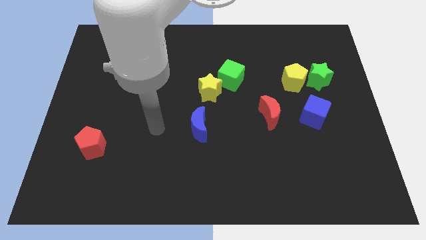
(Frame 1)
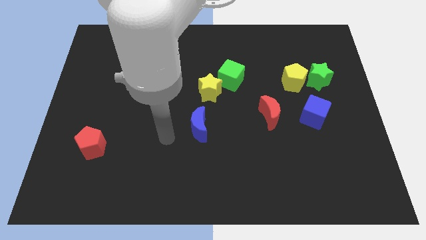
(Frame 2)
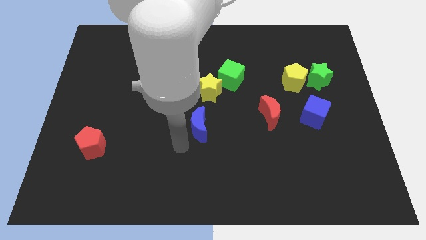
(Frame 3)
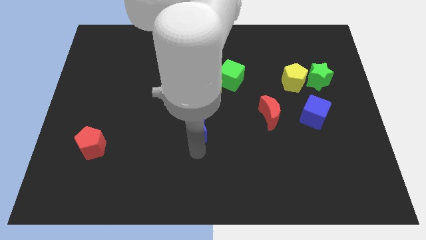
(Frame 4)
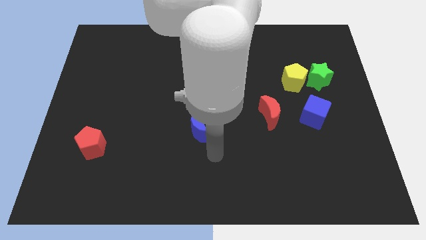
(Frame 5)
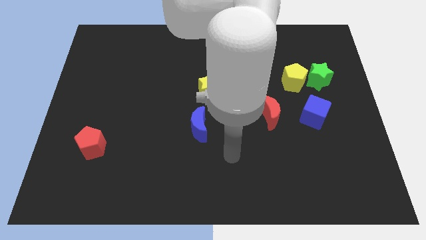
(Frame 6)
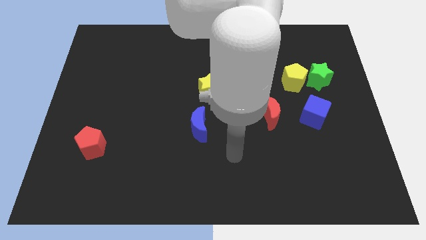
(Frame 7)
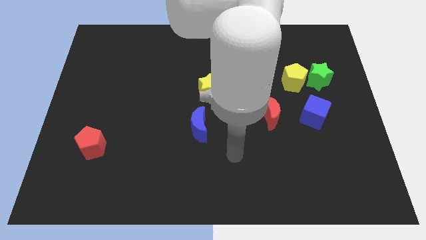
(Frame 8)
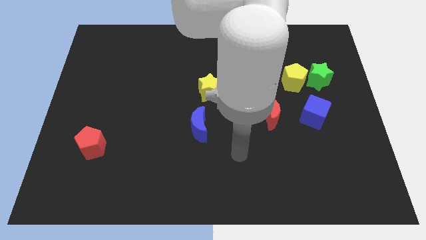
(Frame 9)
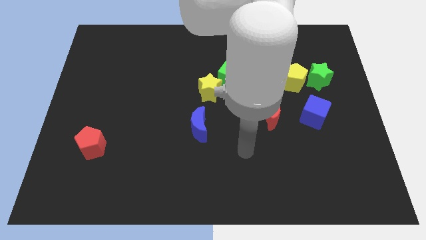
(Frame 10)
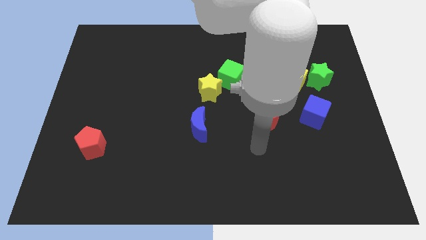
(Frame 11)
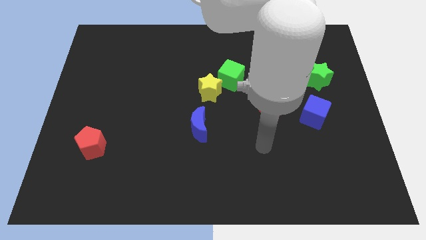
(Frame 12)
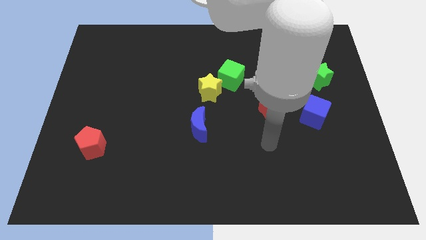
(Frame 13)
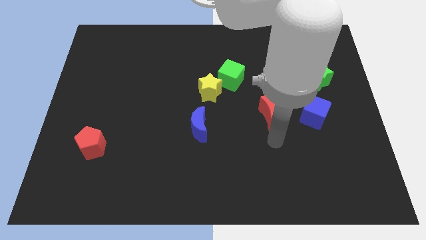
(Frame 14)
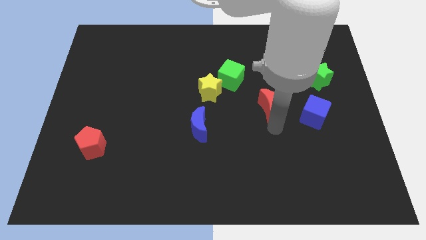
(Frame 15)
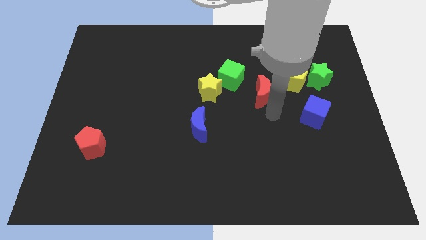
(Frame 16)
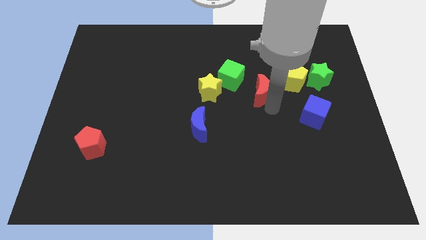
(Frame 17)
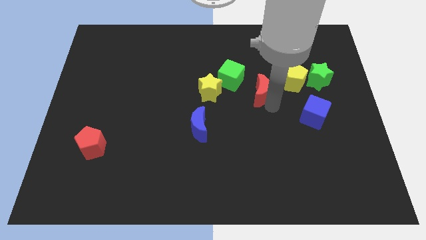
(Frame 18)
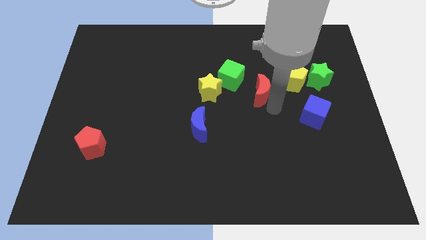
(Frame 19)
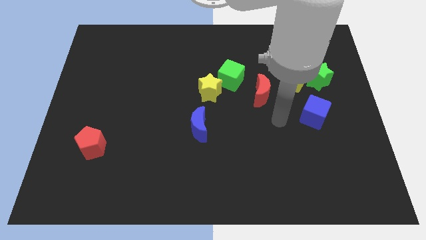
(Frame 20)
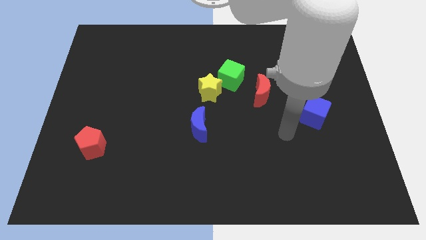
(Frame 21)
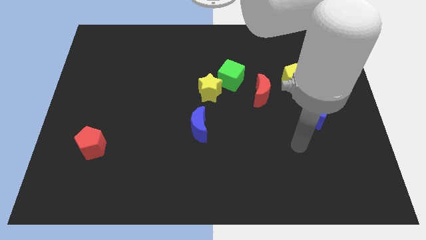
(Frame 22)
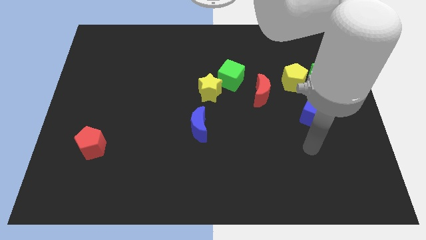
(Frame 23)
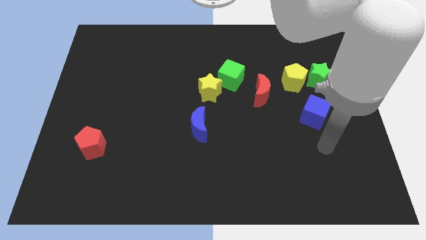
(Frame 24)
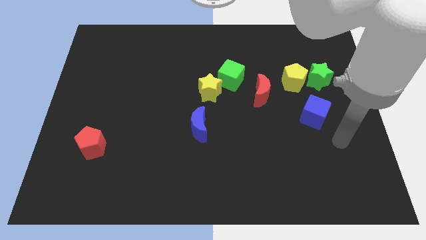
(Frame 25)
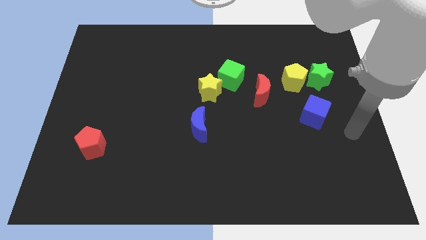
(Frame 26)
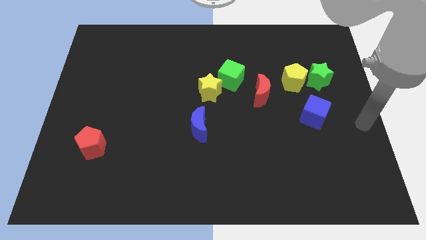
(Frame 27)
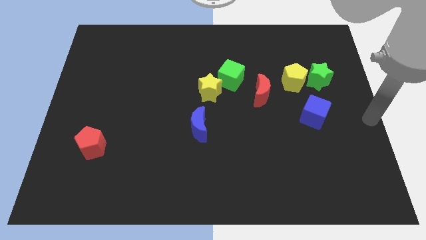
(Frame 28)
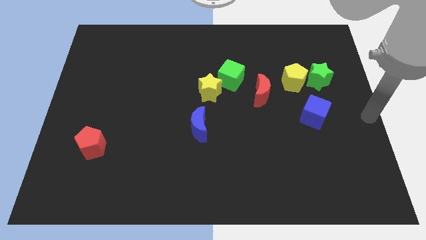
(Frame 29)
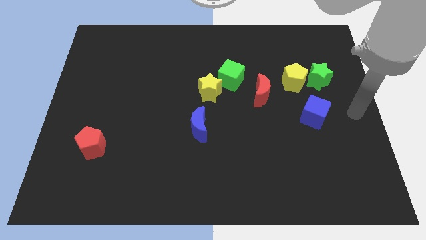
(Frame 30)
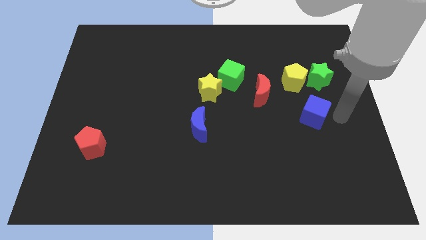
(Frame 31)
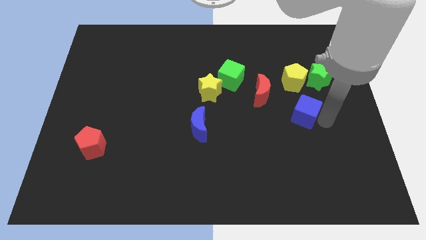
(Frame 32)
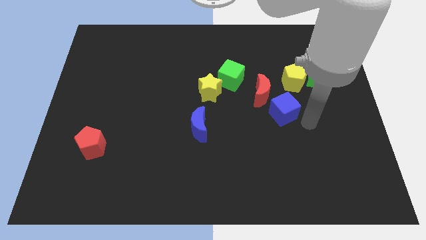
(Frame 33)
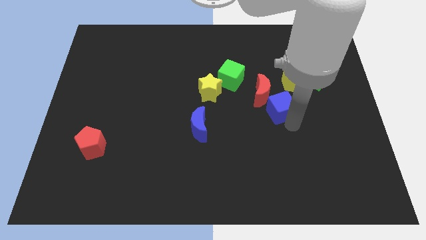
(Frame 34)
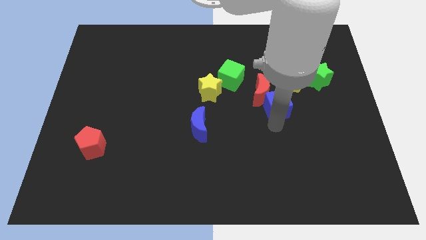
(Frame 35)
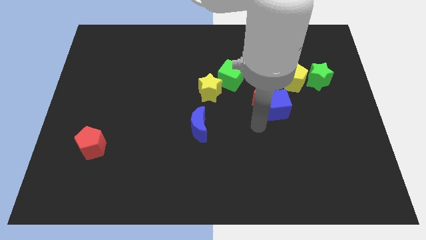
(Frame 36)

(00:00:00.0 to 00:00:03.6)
push the blue cube to the bottom of the red crescent

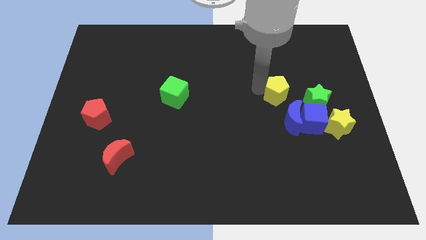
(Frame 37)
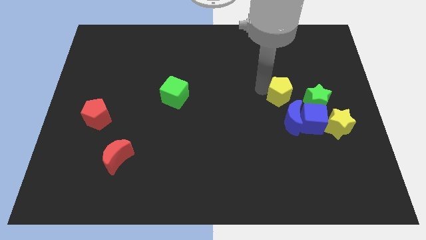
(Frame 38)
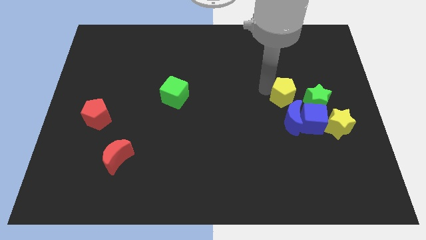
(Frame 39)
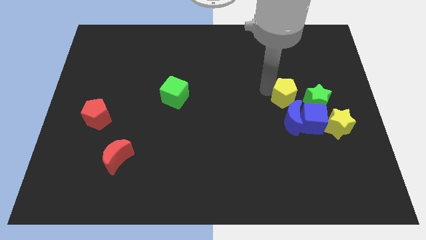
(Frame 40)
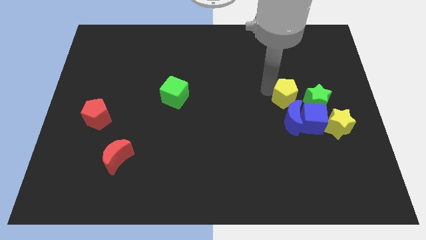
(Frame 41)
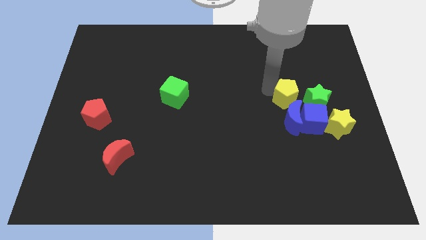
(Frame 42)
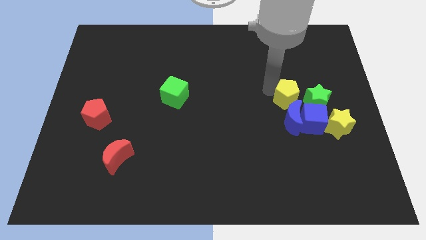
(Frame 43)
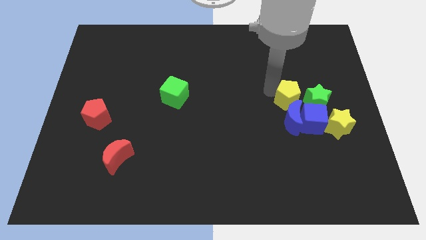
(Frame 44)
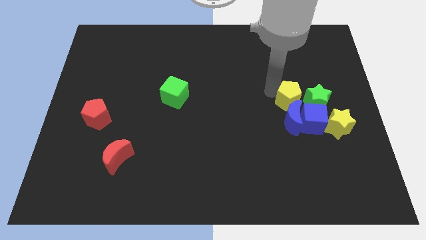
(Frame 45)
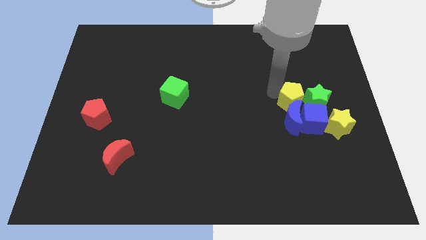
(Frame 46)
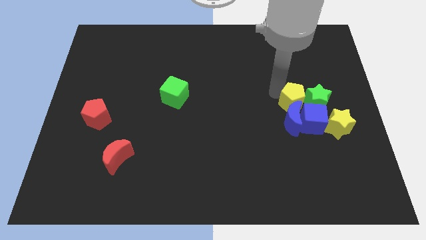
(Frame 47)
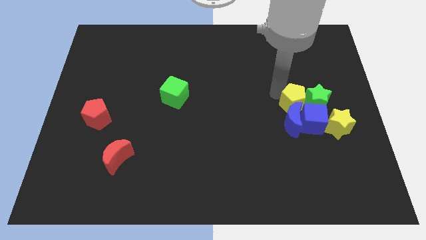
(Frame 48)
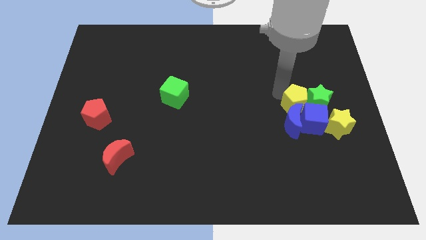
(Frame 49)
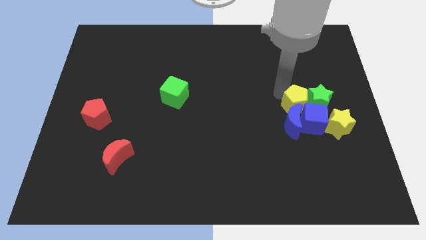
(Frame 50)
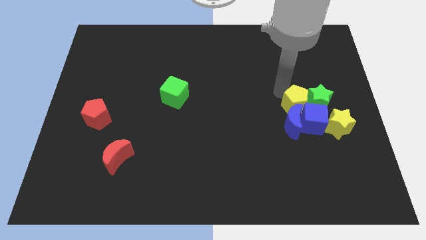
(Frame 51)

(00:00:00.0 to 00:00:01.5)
push the yellow pentagon above the blue crescent

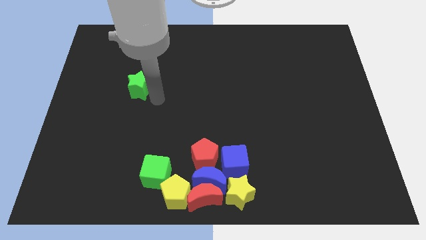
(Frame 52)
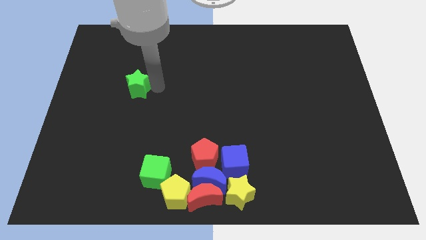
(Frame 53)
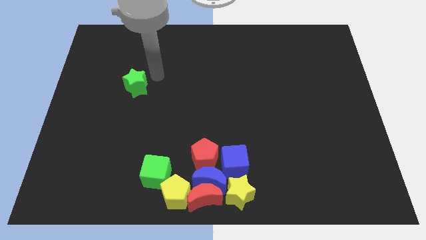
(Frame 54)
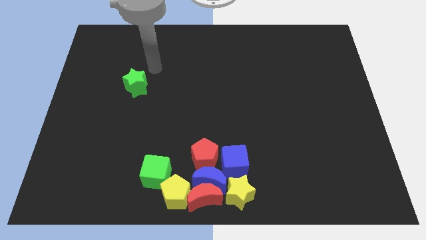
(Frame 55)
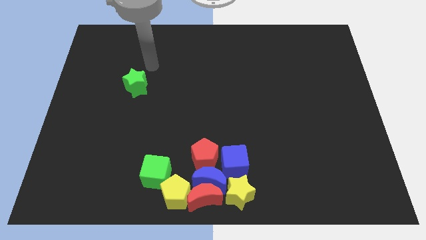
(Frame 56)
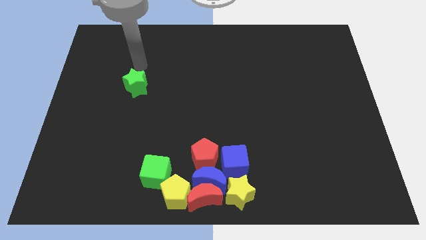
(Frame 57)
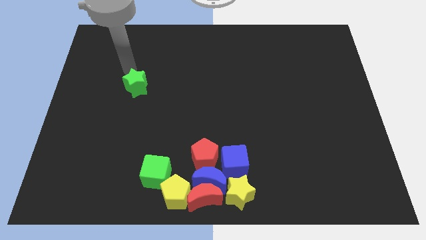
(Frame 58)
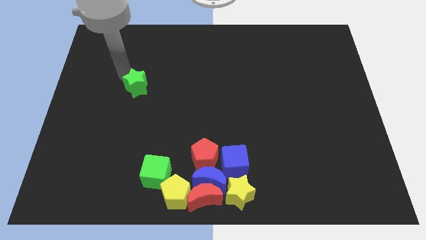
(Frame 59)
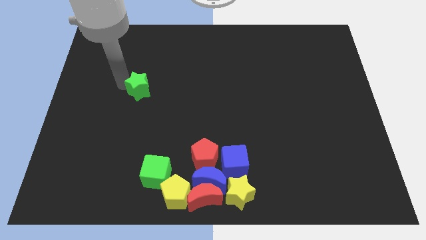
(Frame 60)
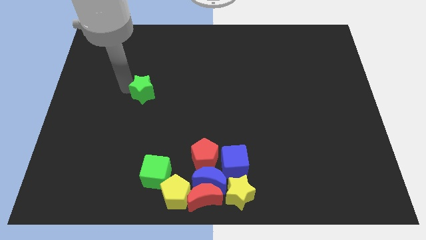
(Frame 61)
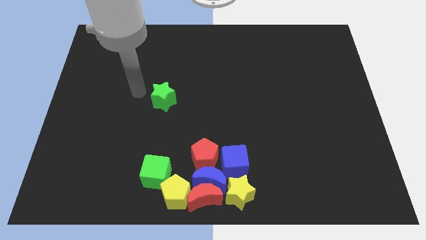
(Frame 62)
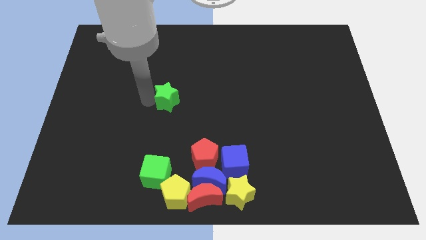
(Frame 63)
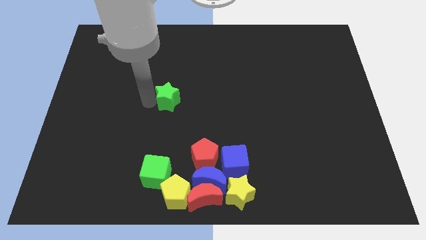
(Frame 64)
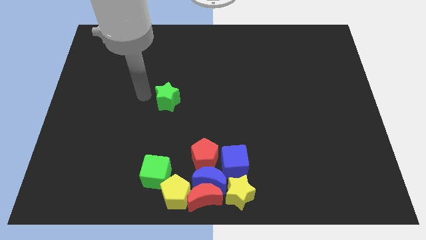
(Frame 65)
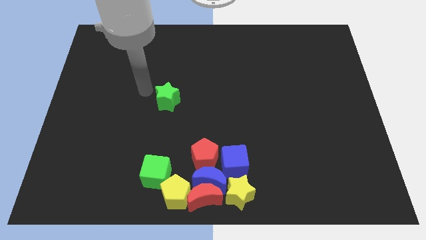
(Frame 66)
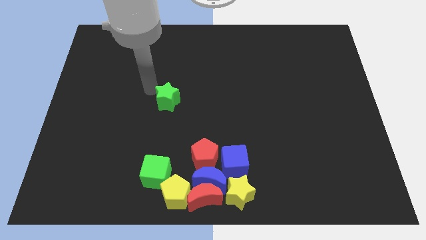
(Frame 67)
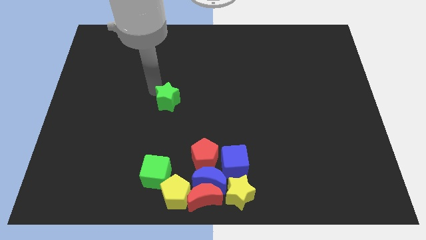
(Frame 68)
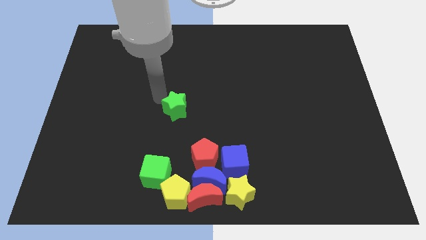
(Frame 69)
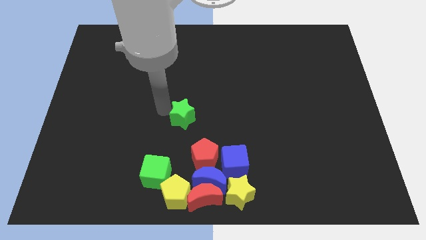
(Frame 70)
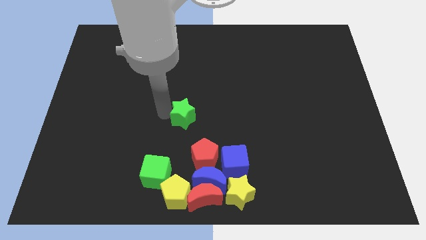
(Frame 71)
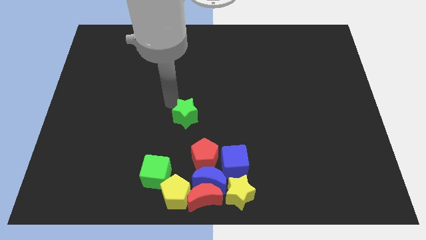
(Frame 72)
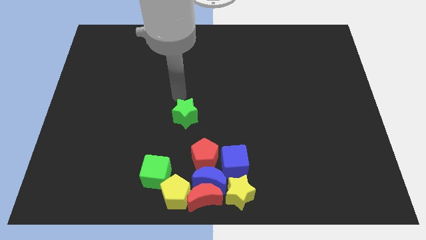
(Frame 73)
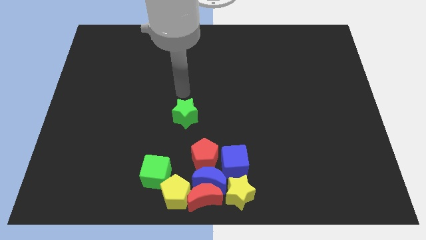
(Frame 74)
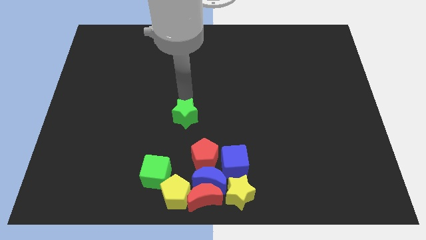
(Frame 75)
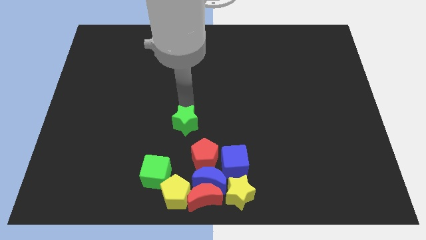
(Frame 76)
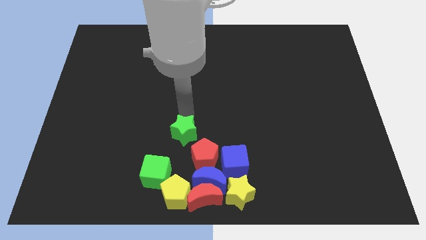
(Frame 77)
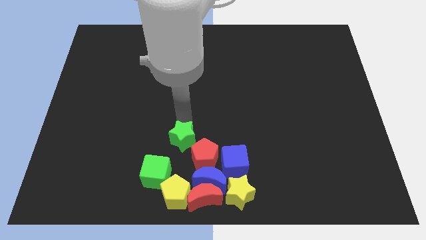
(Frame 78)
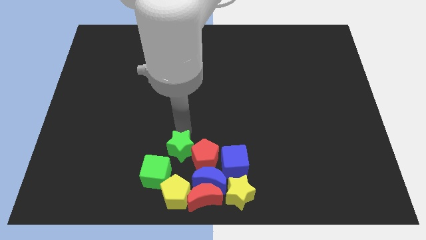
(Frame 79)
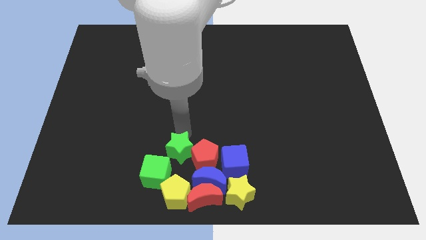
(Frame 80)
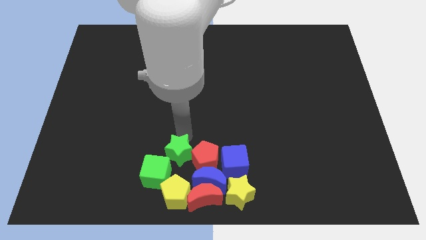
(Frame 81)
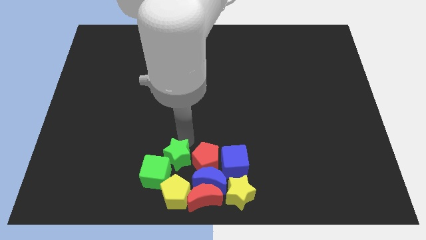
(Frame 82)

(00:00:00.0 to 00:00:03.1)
move the green star to the top right of green cube

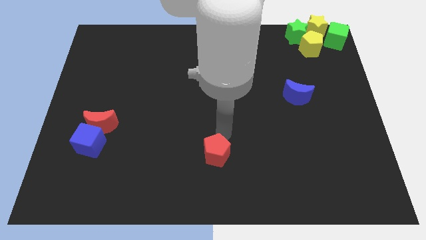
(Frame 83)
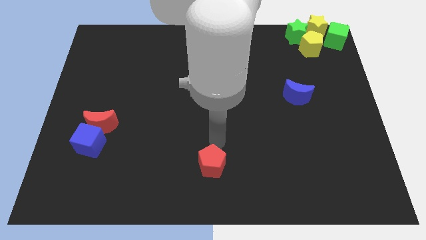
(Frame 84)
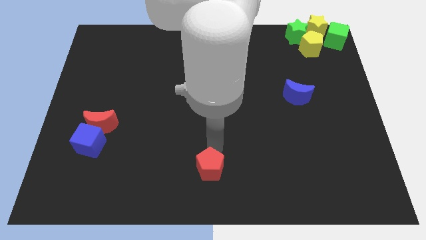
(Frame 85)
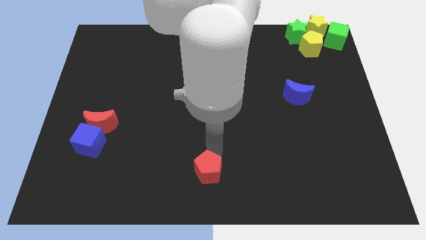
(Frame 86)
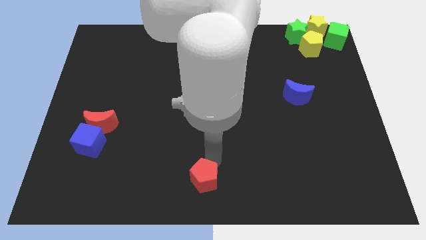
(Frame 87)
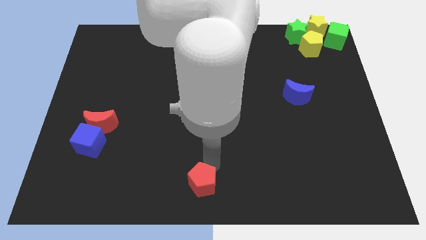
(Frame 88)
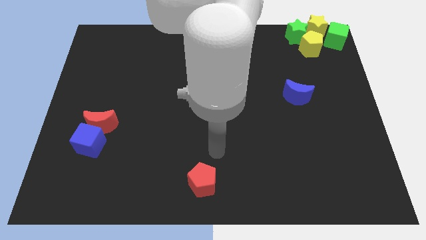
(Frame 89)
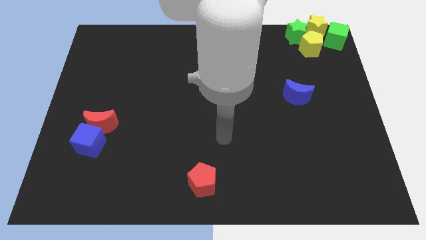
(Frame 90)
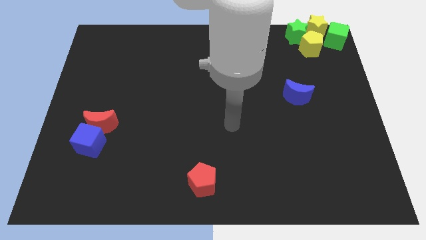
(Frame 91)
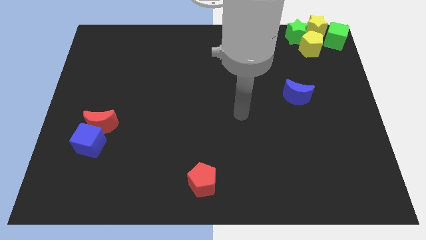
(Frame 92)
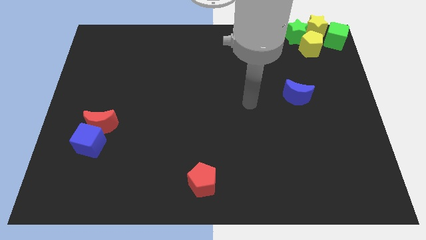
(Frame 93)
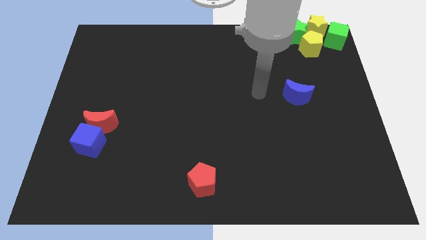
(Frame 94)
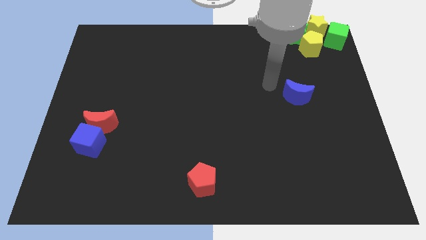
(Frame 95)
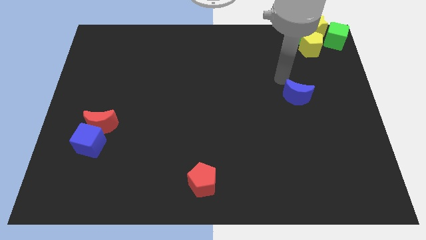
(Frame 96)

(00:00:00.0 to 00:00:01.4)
slide the red pentagon to the bottom center
